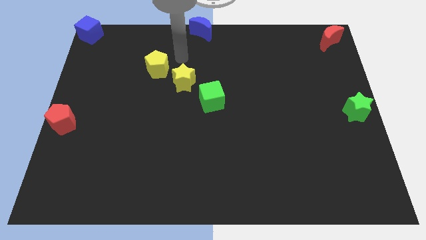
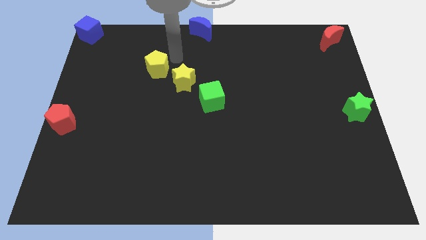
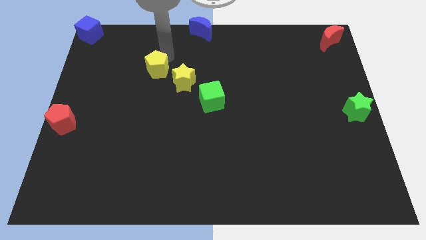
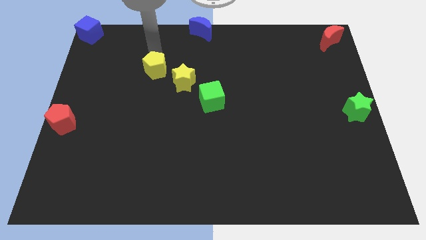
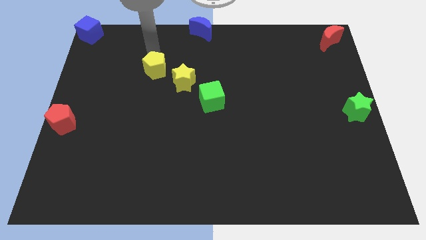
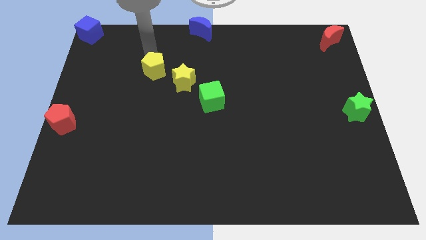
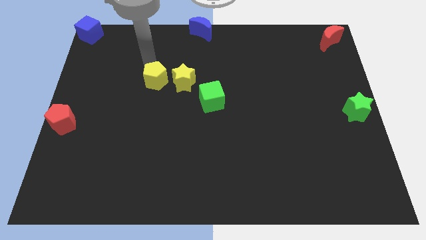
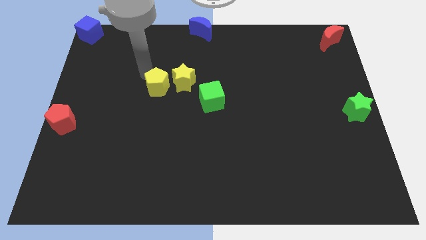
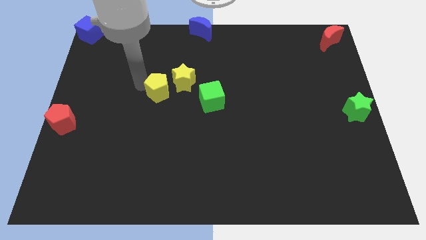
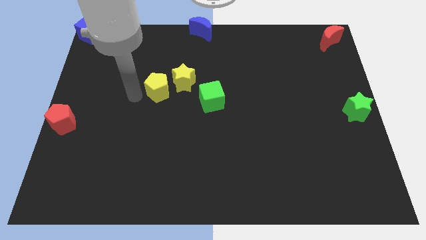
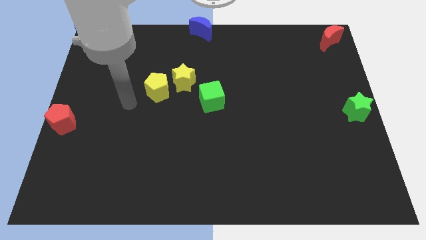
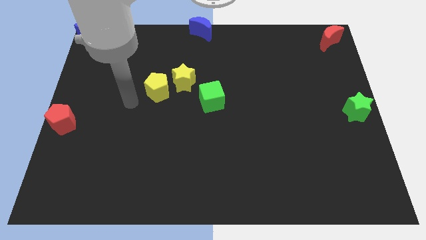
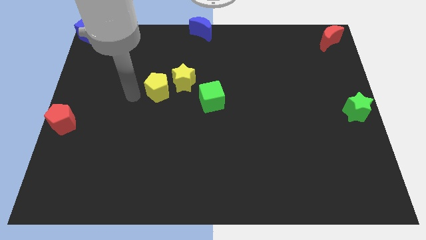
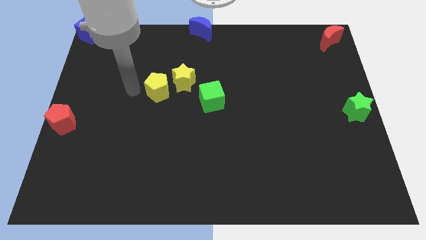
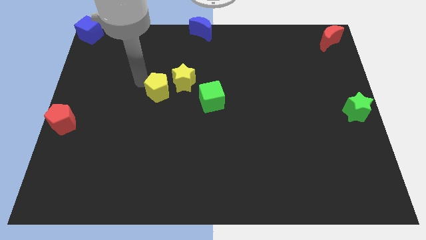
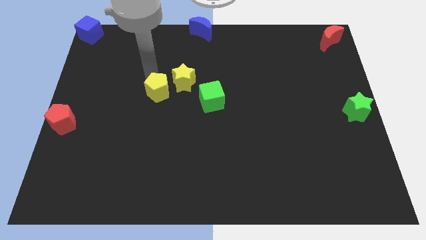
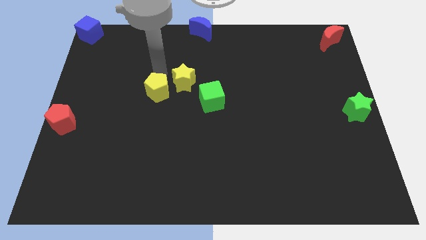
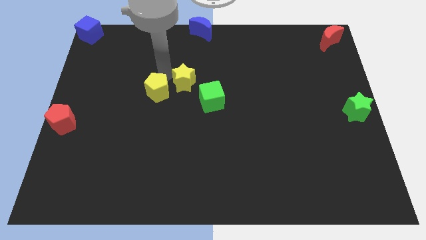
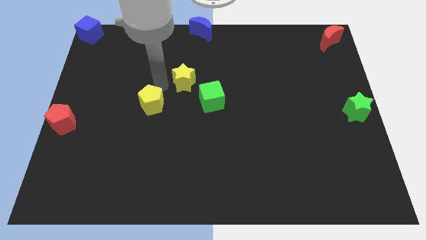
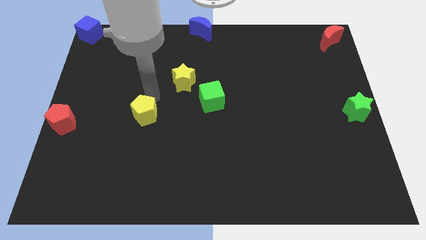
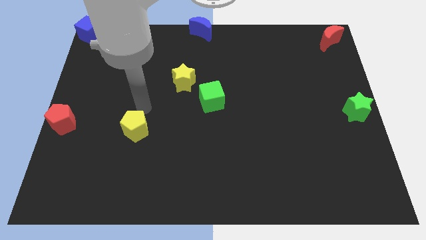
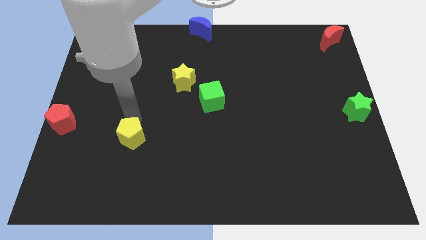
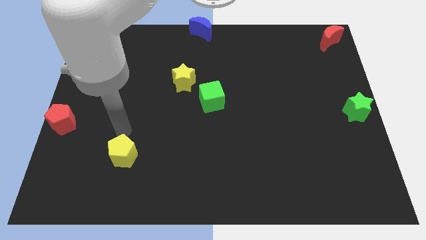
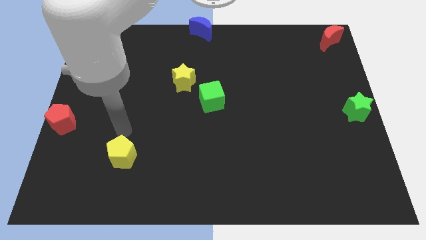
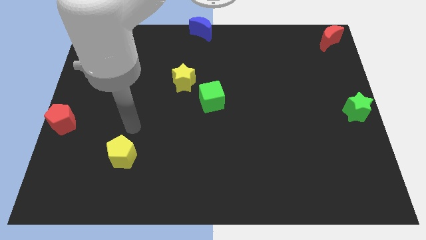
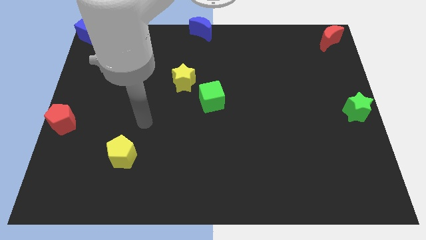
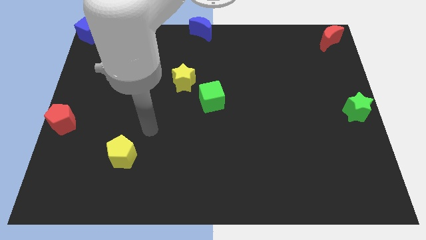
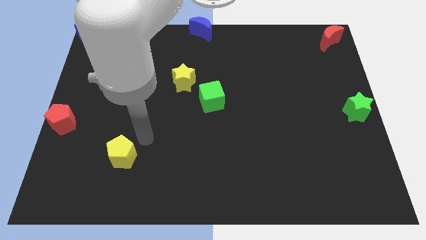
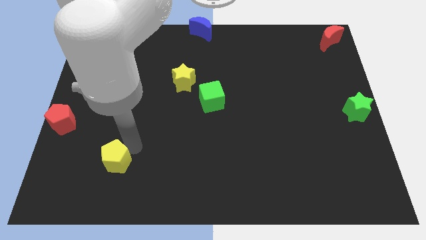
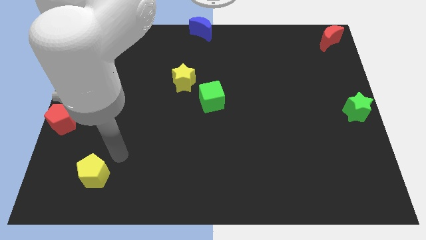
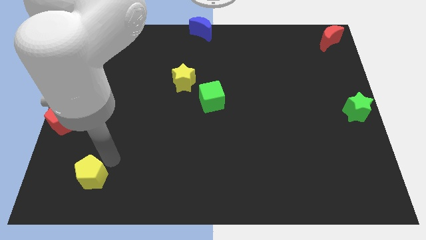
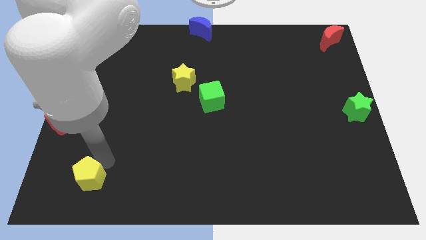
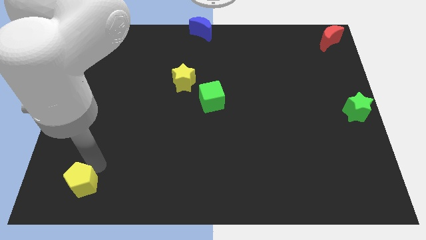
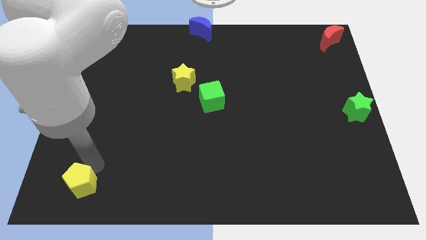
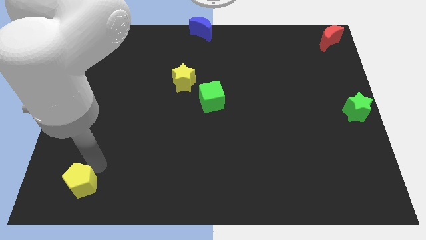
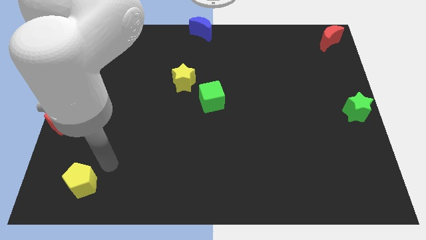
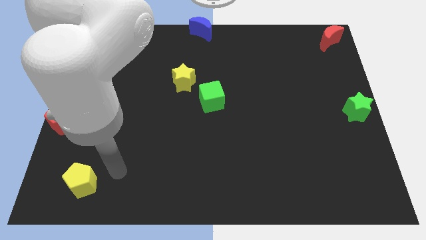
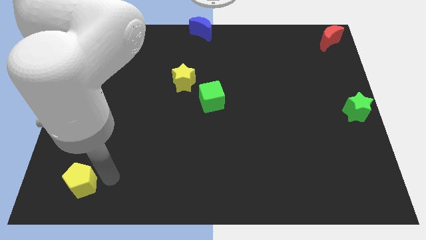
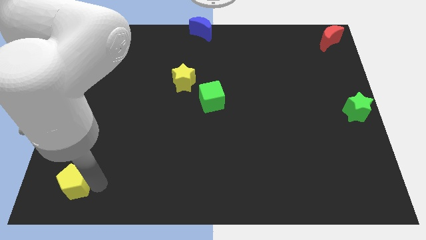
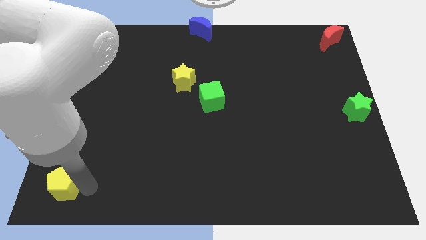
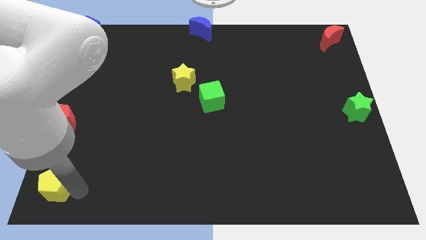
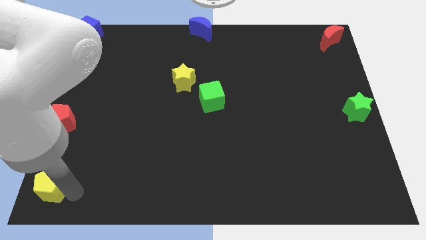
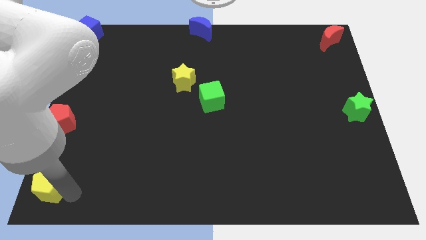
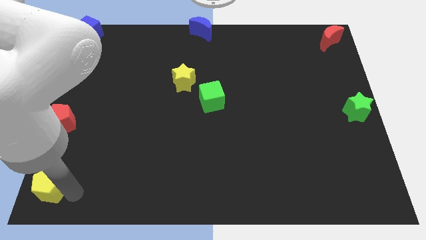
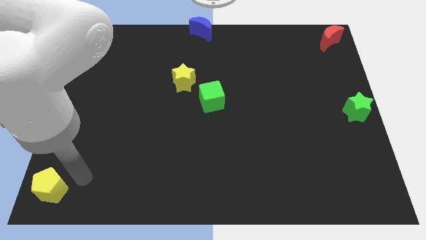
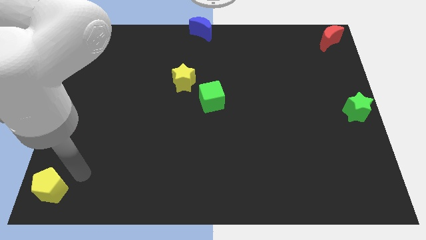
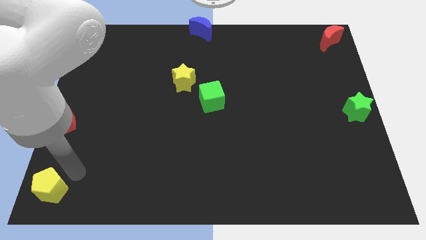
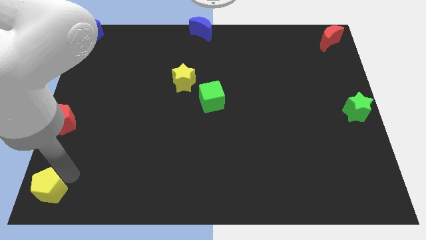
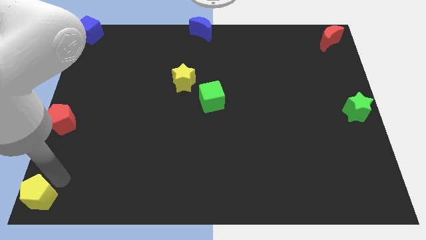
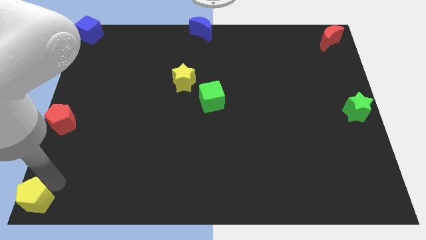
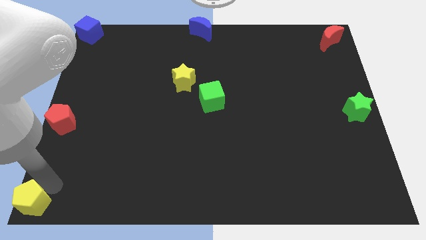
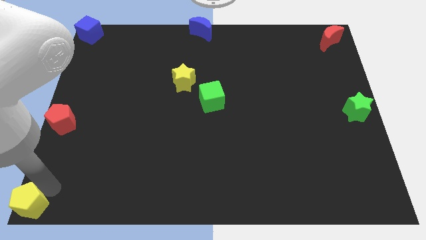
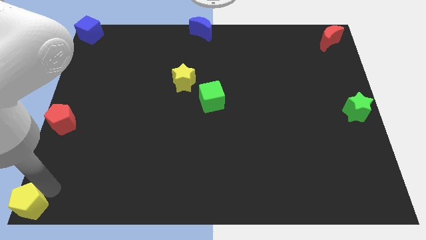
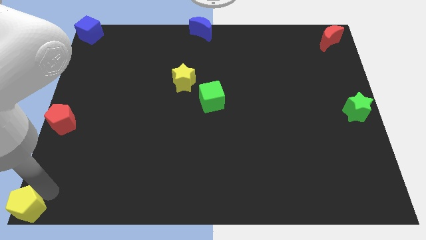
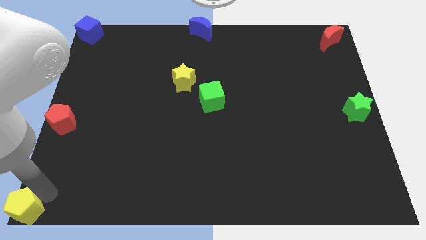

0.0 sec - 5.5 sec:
push the yellow pentagon to the bottom left of the board

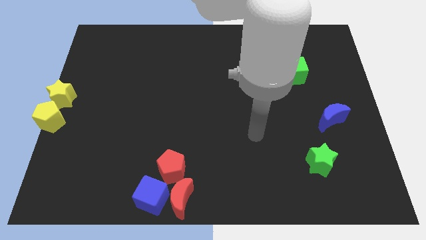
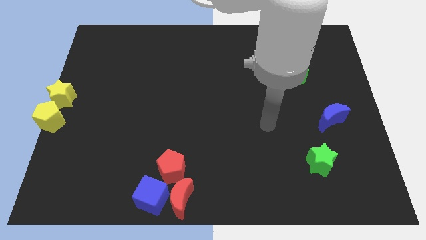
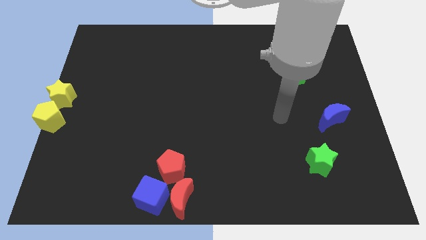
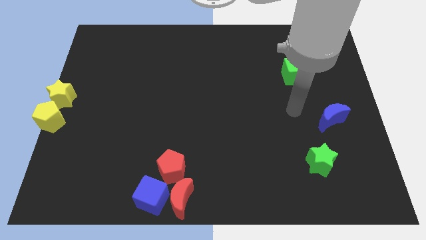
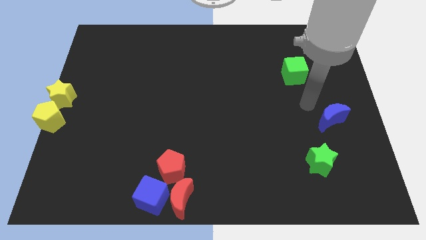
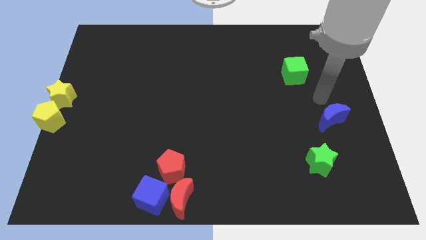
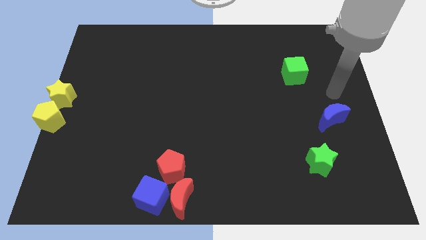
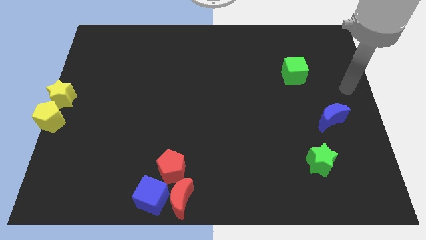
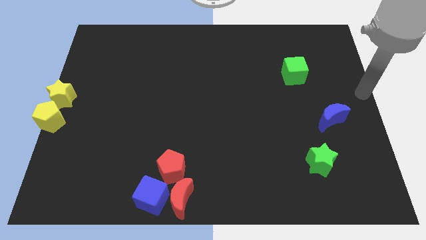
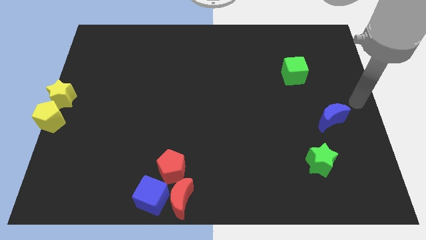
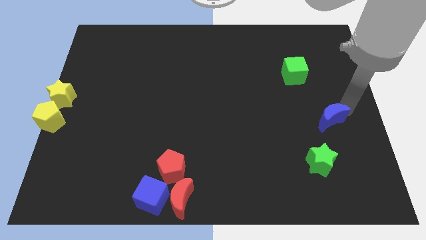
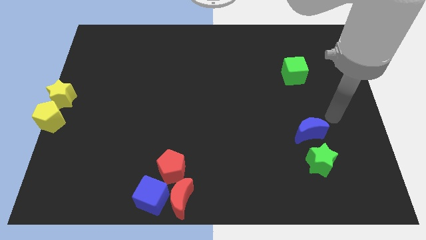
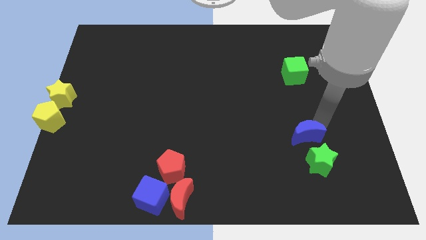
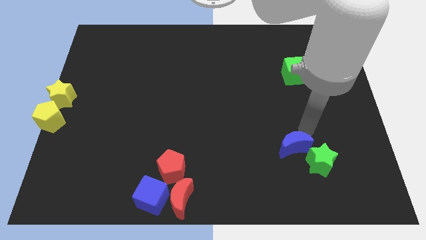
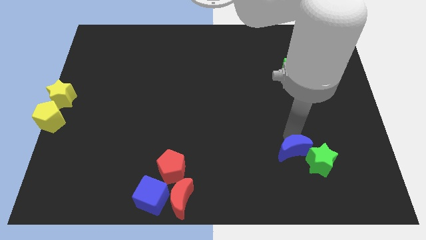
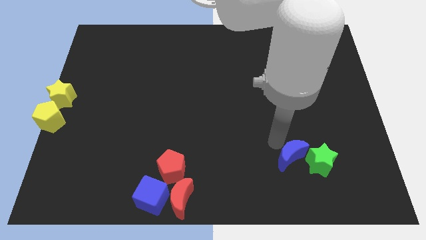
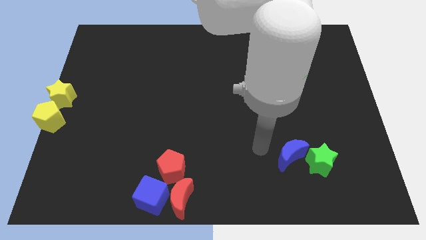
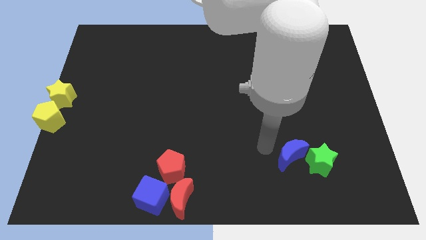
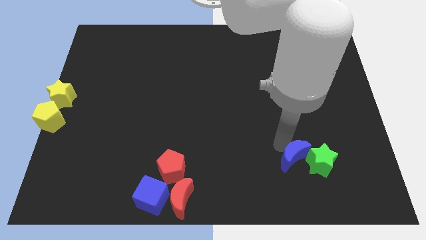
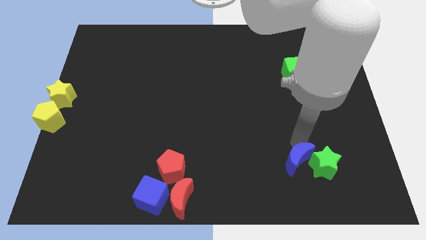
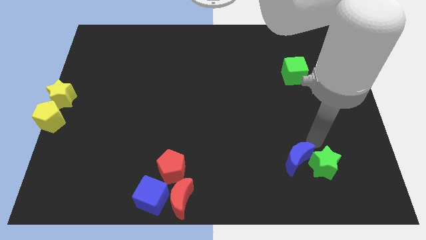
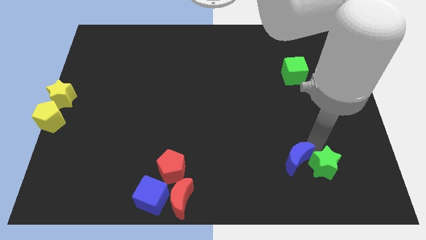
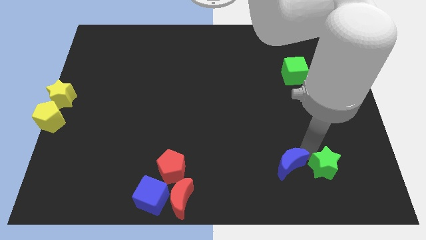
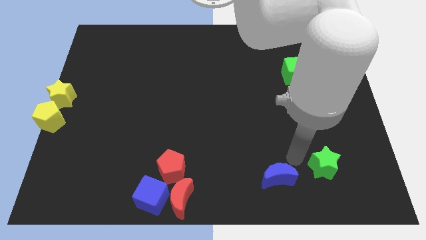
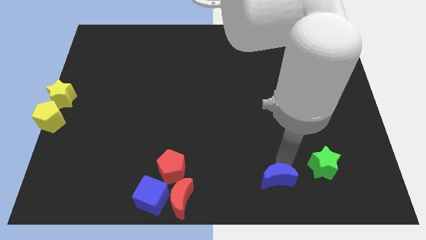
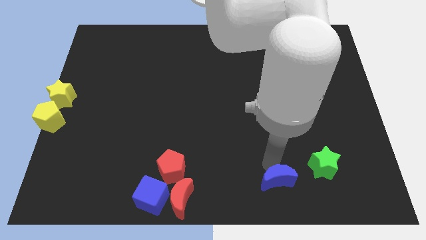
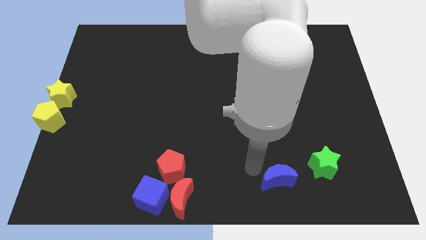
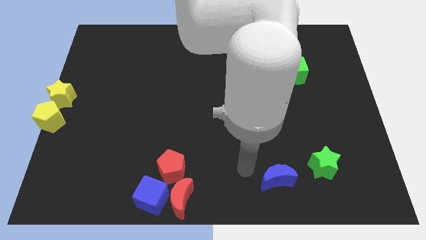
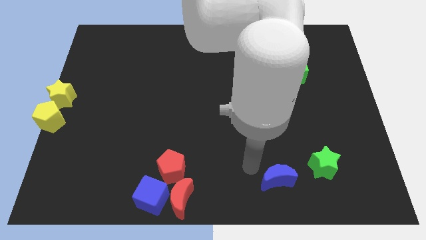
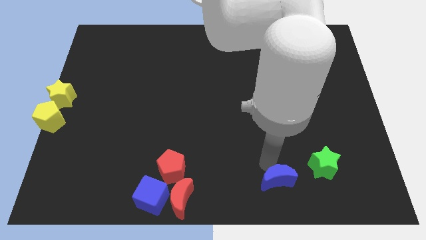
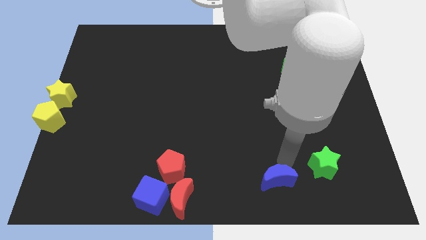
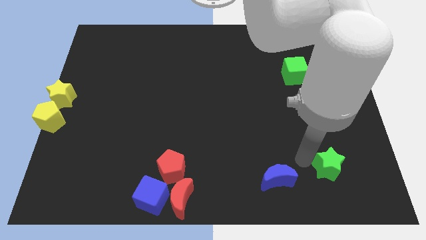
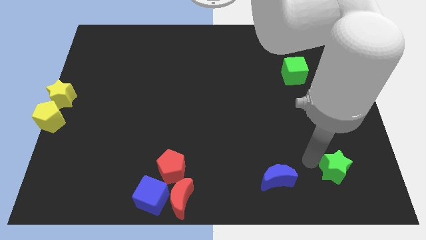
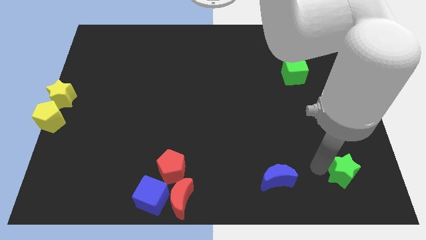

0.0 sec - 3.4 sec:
push the green star to the right side of the board
